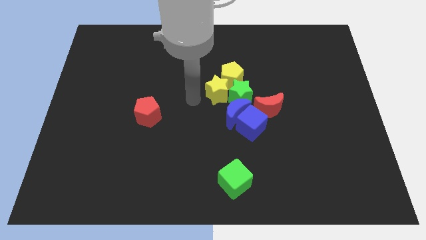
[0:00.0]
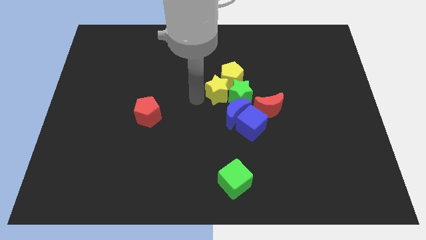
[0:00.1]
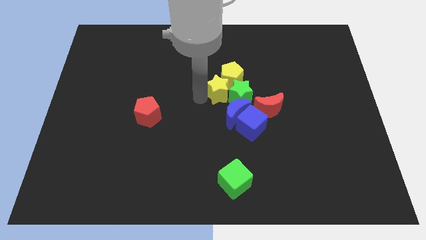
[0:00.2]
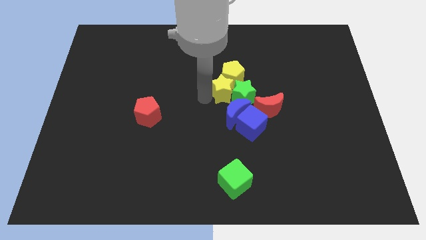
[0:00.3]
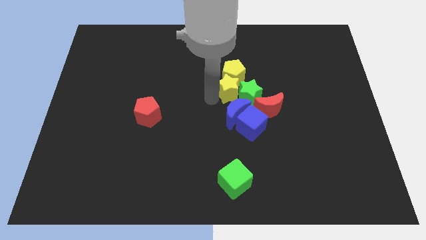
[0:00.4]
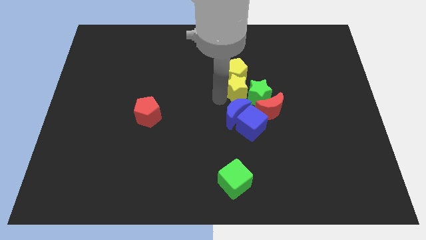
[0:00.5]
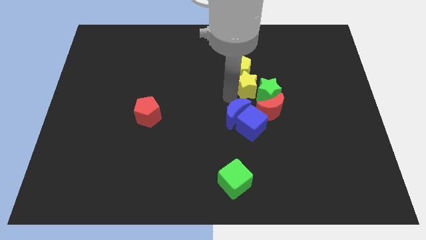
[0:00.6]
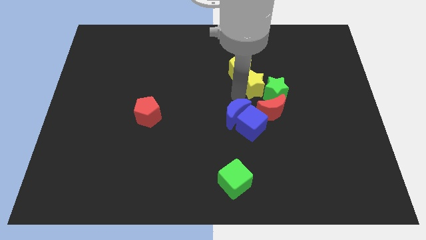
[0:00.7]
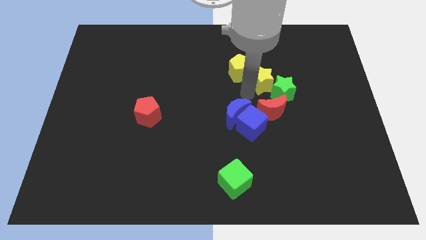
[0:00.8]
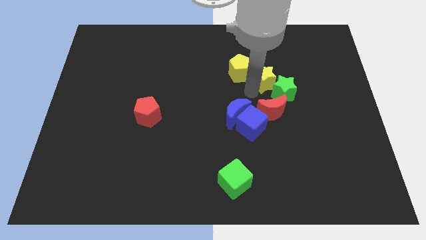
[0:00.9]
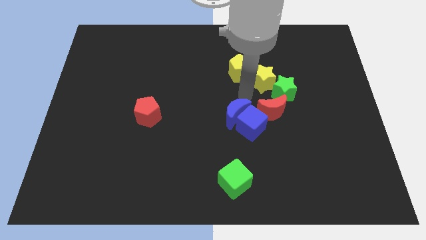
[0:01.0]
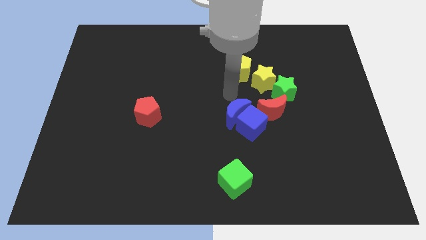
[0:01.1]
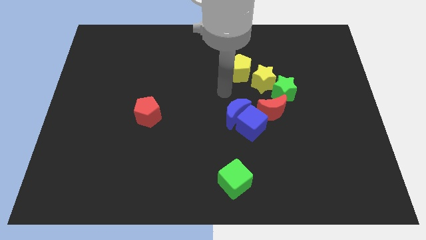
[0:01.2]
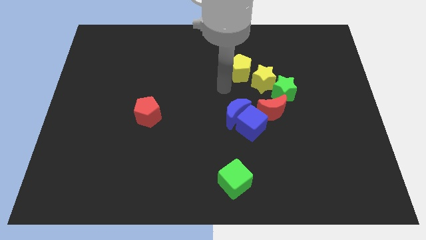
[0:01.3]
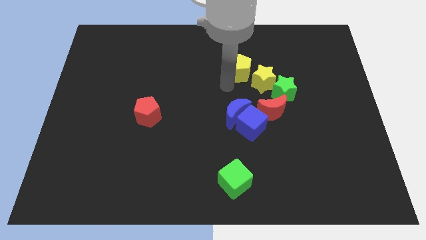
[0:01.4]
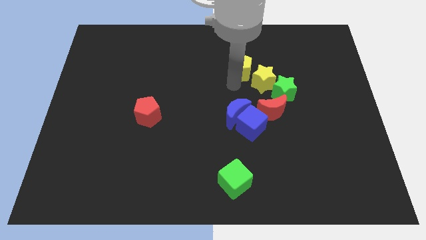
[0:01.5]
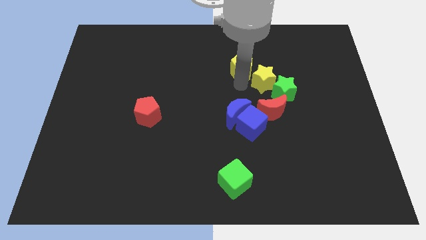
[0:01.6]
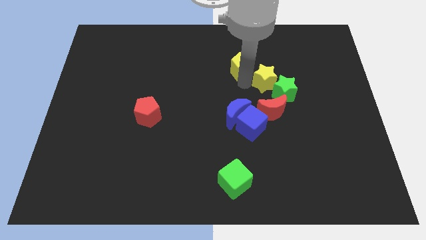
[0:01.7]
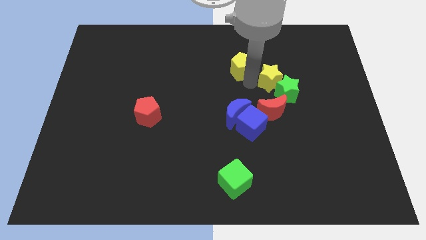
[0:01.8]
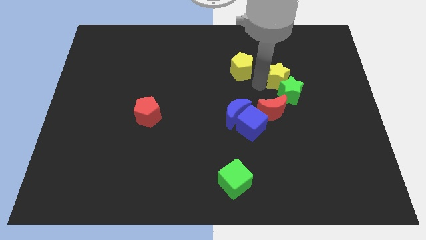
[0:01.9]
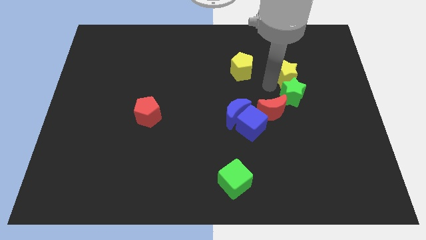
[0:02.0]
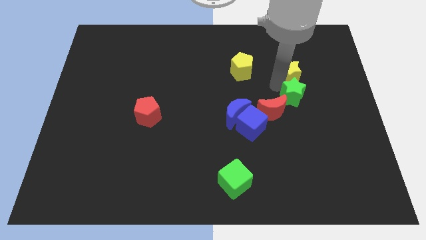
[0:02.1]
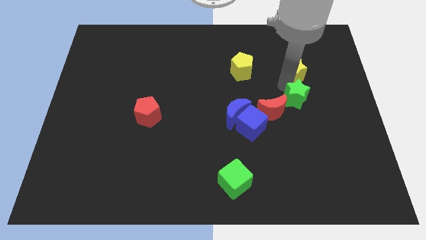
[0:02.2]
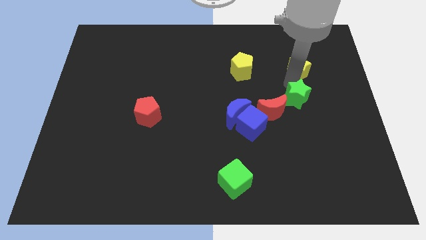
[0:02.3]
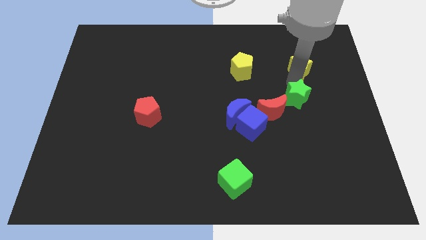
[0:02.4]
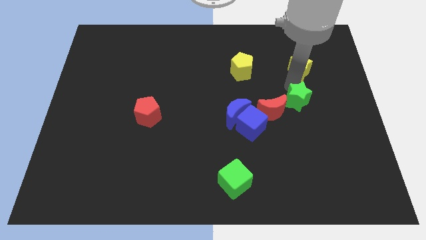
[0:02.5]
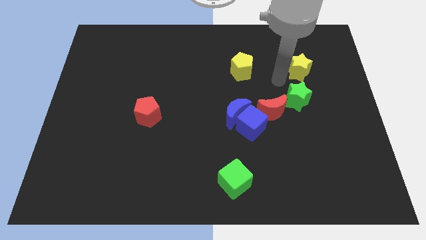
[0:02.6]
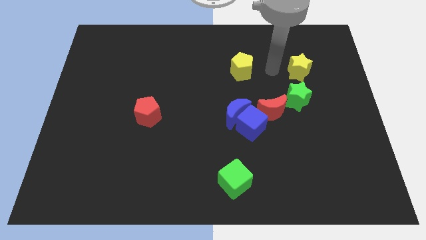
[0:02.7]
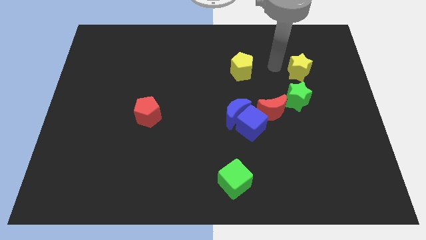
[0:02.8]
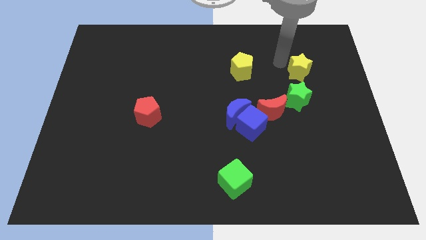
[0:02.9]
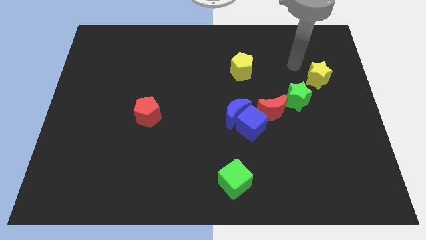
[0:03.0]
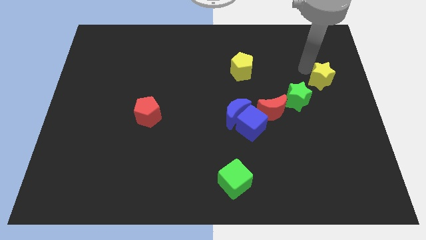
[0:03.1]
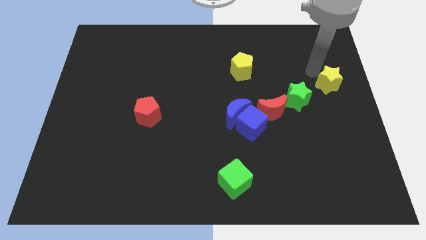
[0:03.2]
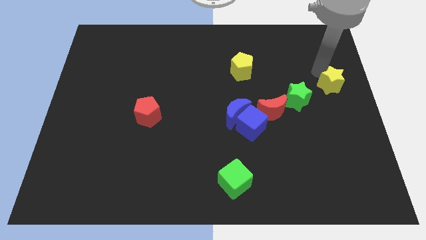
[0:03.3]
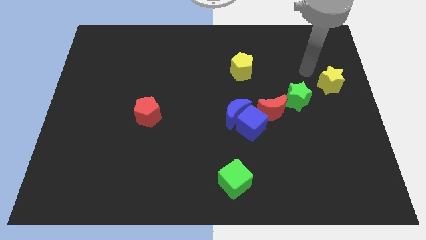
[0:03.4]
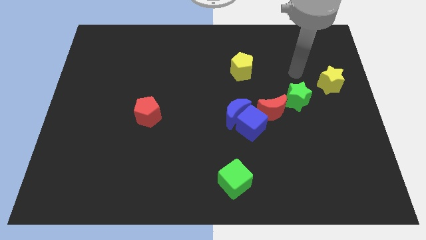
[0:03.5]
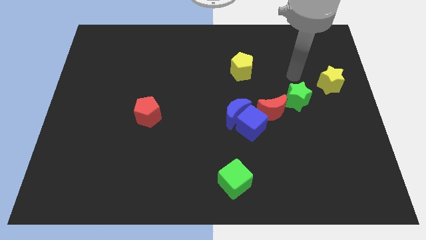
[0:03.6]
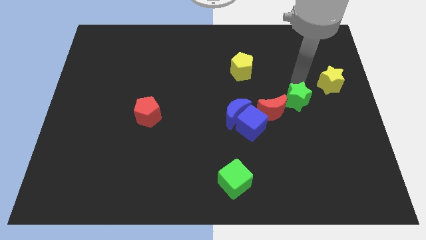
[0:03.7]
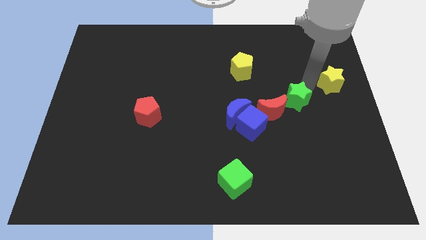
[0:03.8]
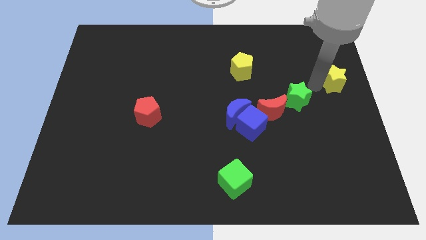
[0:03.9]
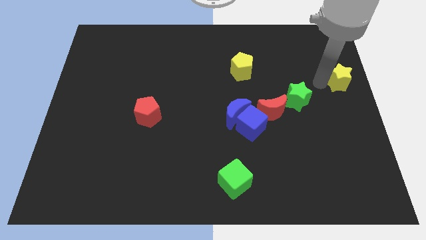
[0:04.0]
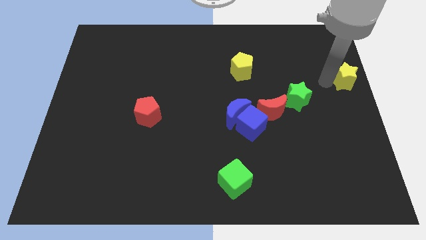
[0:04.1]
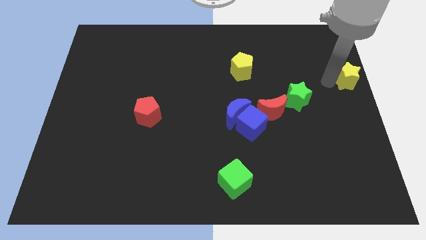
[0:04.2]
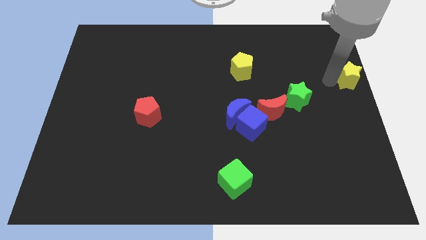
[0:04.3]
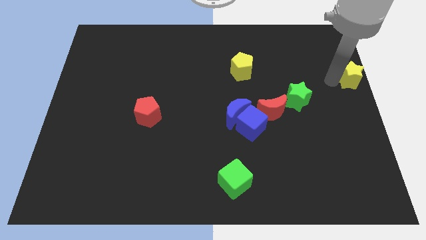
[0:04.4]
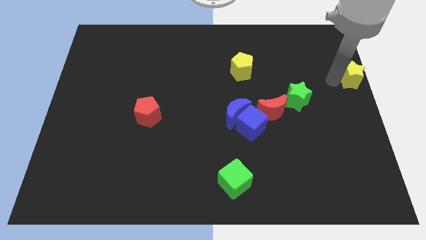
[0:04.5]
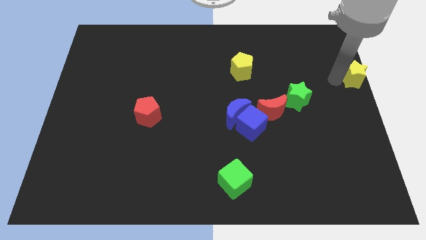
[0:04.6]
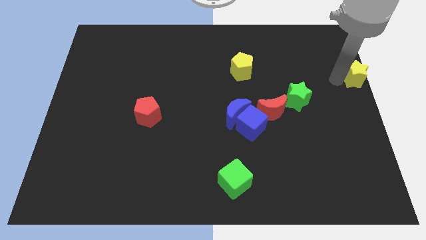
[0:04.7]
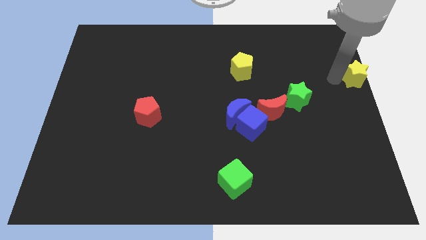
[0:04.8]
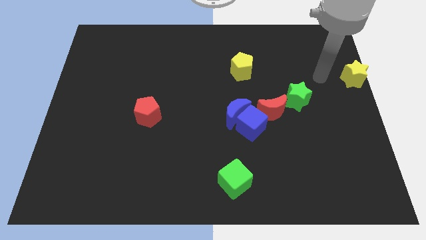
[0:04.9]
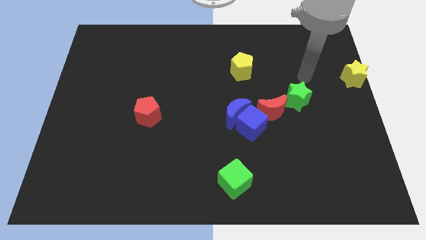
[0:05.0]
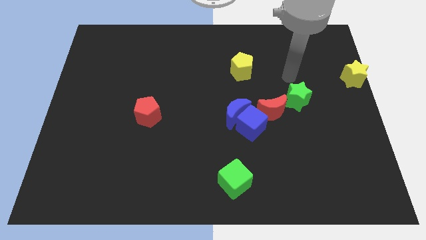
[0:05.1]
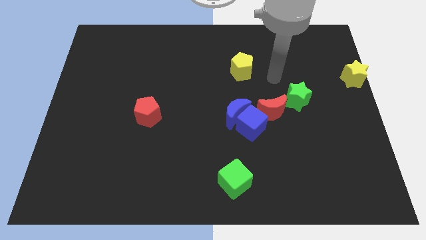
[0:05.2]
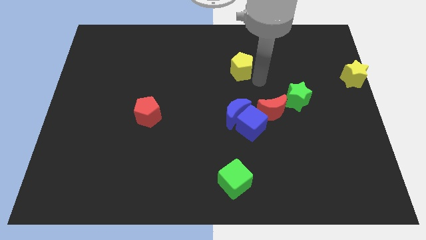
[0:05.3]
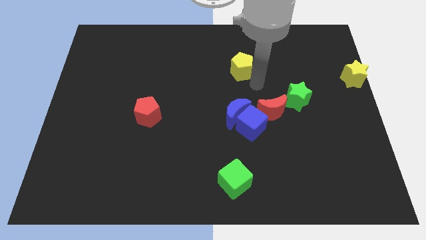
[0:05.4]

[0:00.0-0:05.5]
place yellow star to the right side of the board

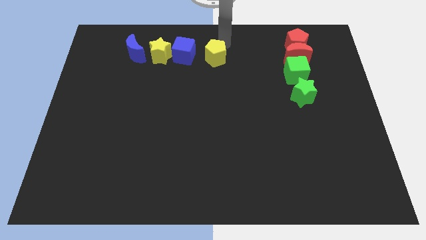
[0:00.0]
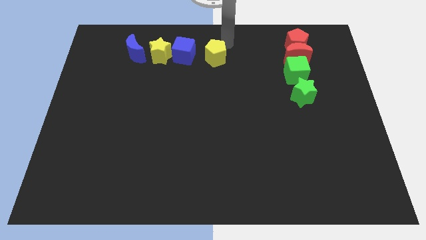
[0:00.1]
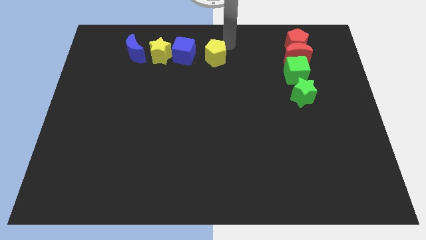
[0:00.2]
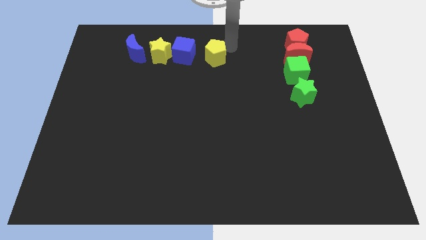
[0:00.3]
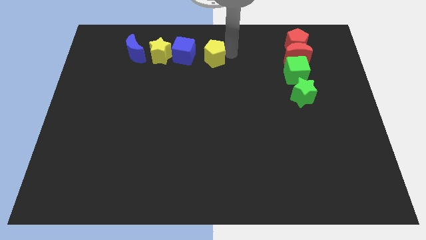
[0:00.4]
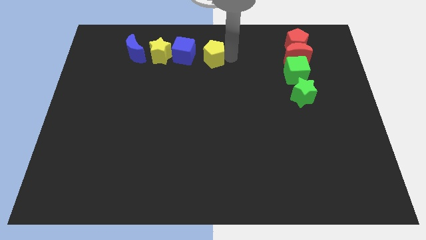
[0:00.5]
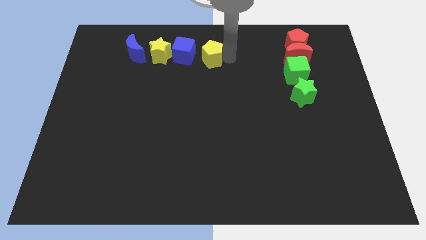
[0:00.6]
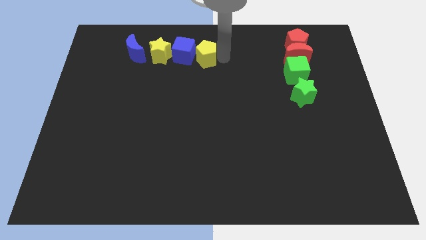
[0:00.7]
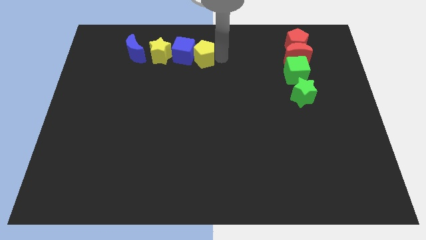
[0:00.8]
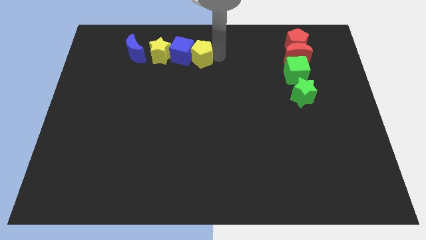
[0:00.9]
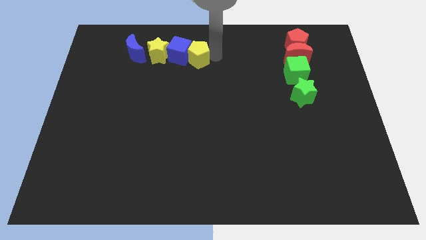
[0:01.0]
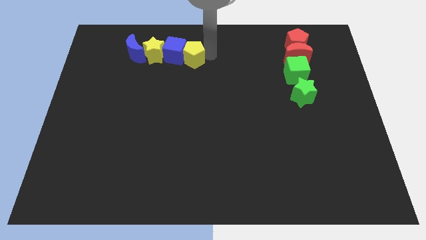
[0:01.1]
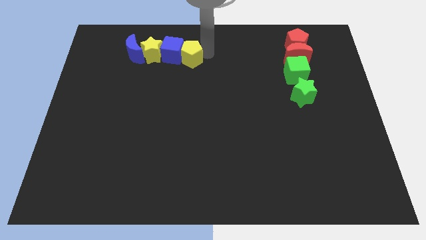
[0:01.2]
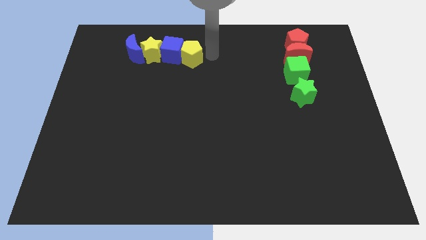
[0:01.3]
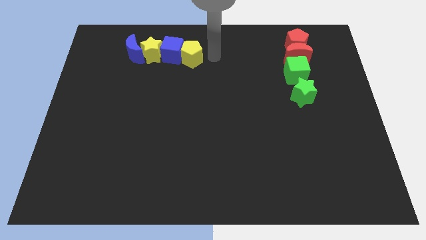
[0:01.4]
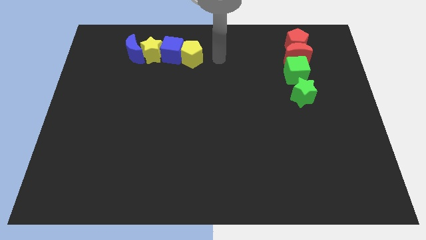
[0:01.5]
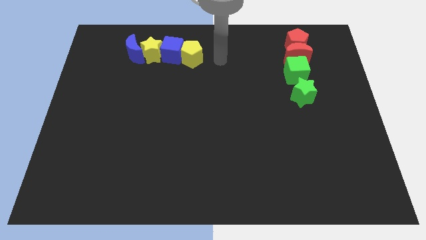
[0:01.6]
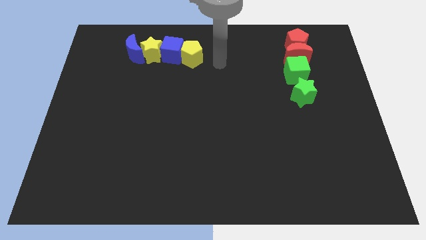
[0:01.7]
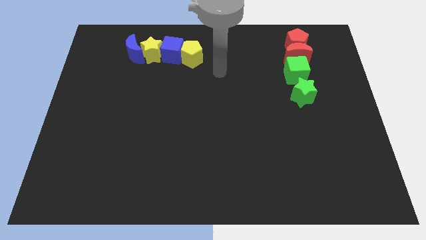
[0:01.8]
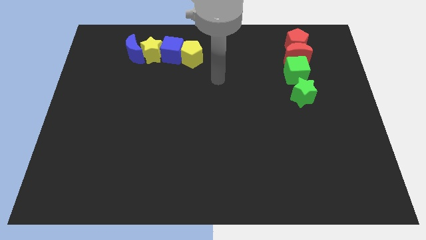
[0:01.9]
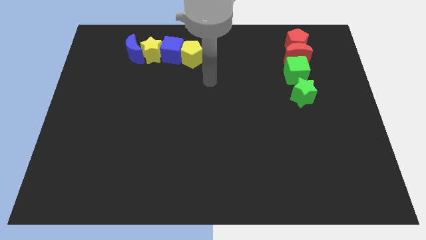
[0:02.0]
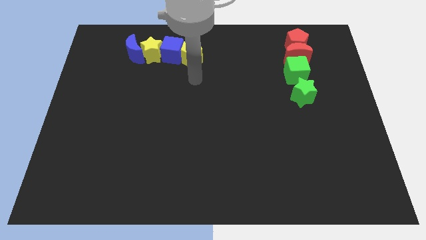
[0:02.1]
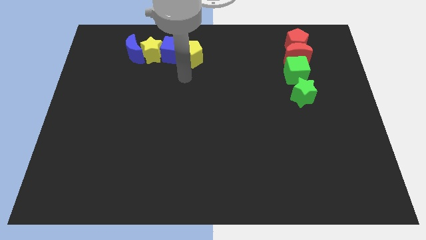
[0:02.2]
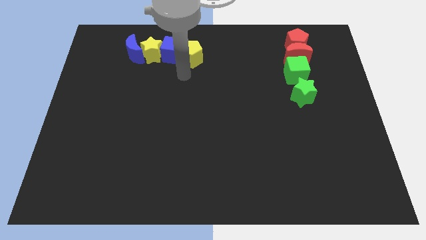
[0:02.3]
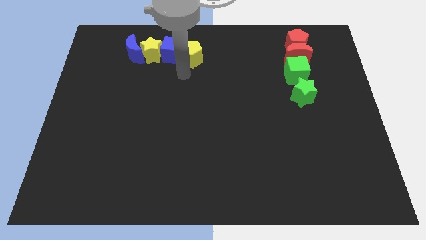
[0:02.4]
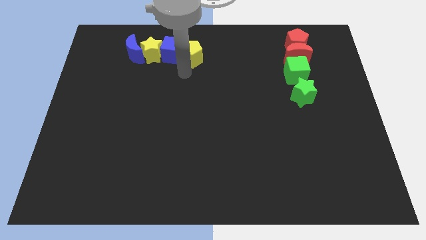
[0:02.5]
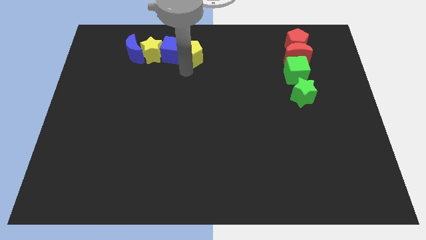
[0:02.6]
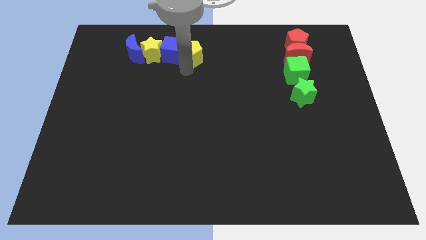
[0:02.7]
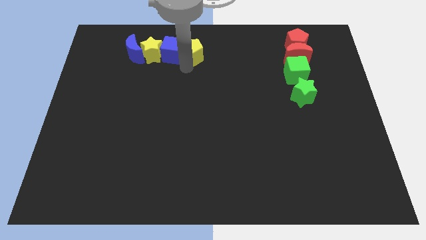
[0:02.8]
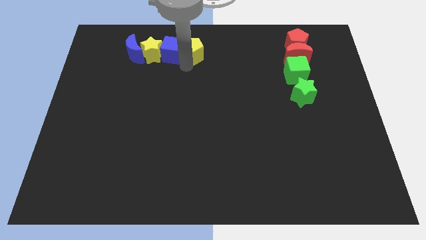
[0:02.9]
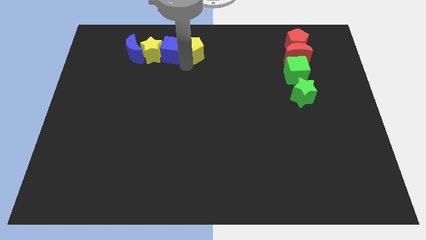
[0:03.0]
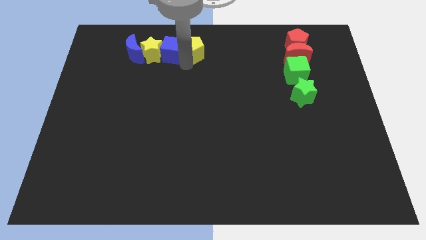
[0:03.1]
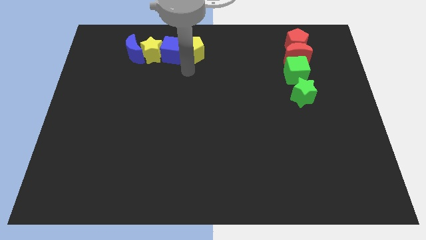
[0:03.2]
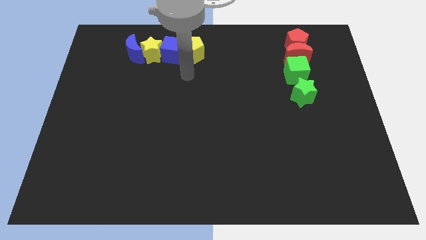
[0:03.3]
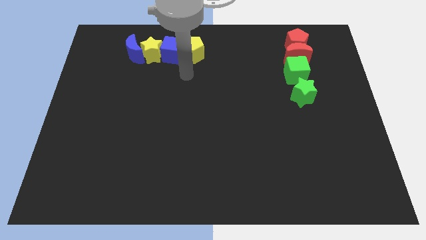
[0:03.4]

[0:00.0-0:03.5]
make a horizontal line with the yellow pentagon blue cube yellow star and blue crescent at the top side of the board
